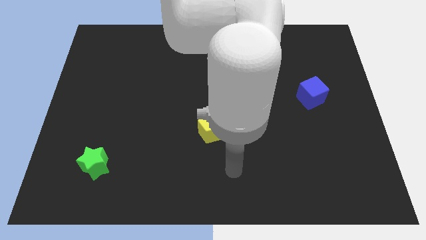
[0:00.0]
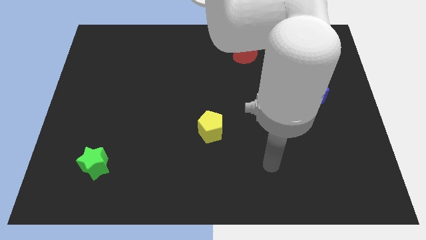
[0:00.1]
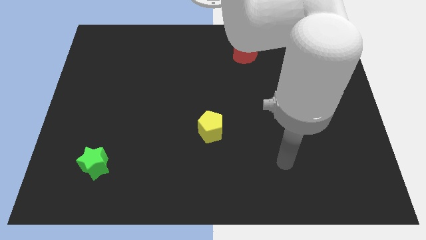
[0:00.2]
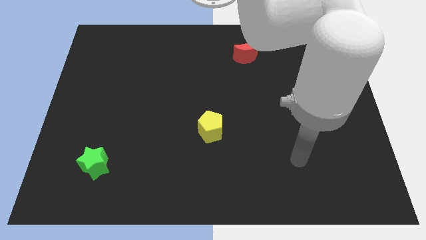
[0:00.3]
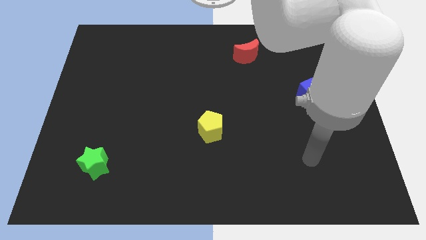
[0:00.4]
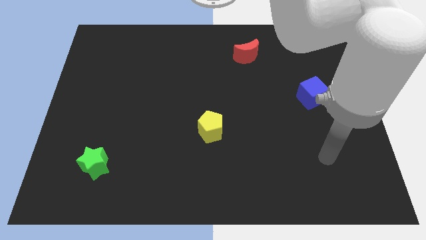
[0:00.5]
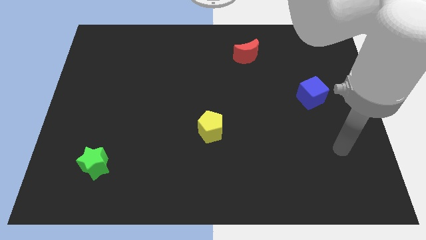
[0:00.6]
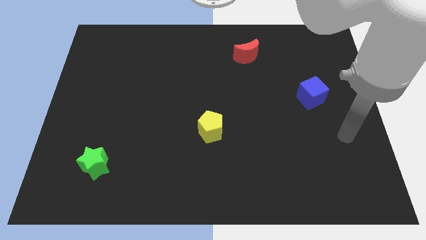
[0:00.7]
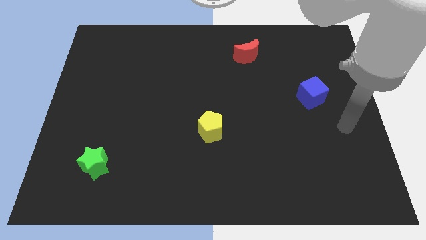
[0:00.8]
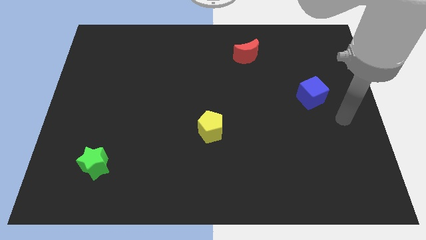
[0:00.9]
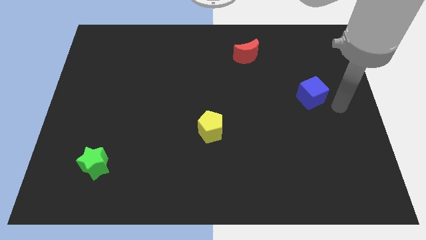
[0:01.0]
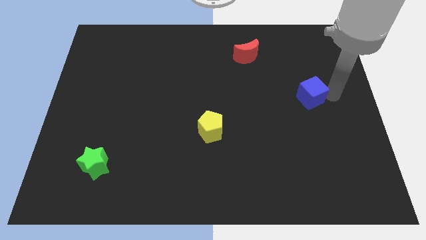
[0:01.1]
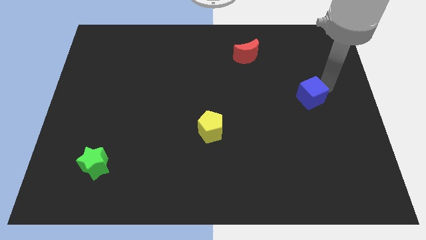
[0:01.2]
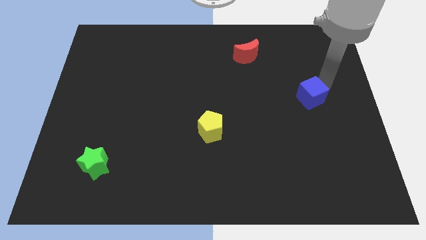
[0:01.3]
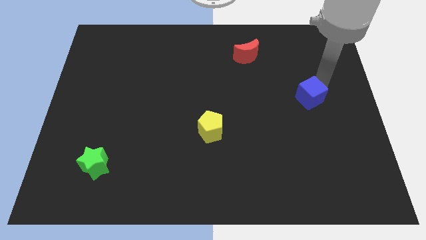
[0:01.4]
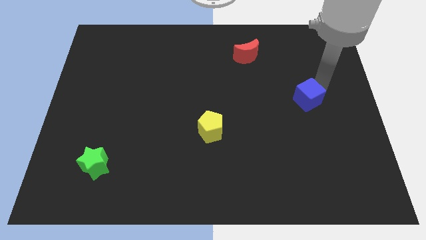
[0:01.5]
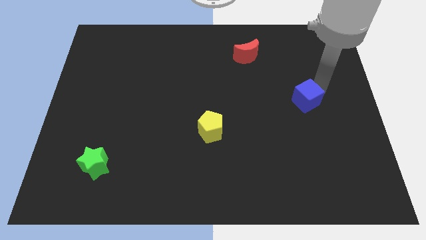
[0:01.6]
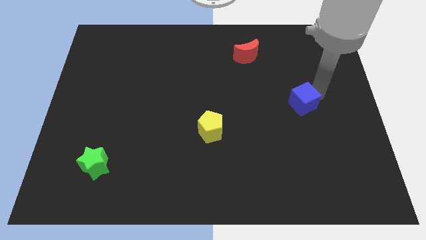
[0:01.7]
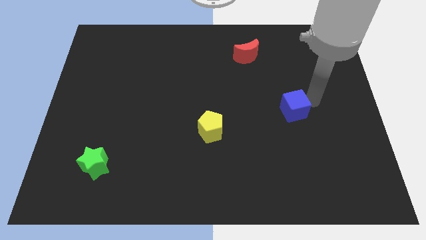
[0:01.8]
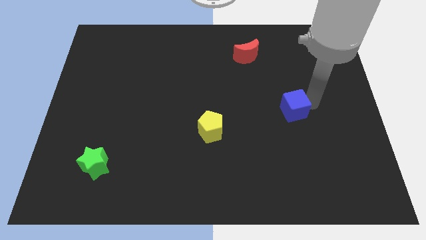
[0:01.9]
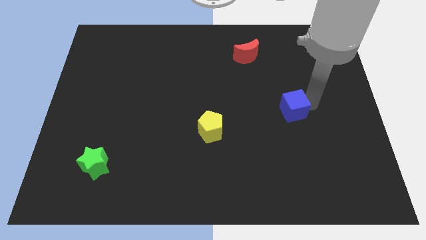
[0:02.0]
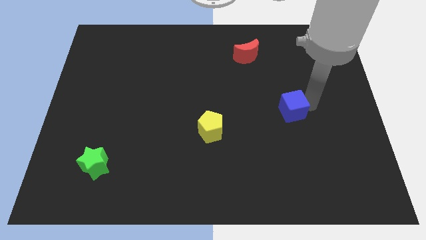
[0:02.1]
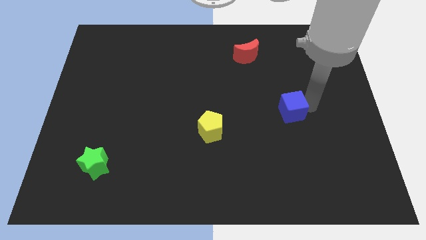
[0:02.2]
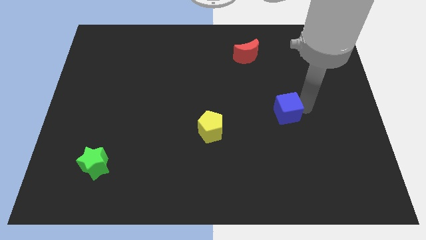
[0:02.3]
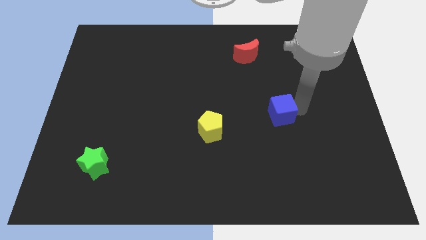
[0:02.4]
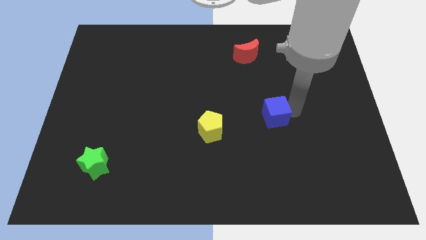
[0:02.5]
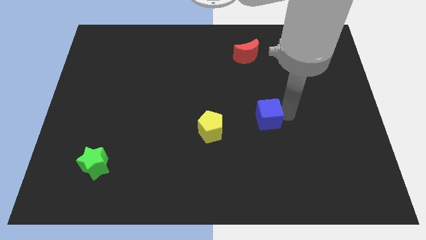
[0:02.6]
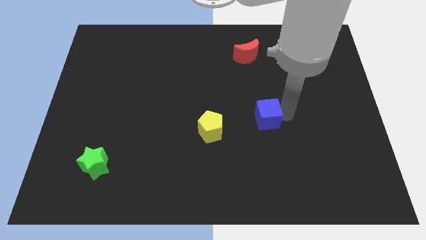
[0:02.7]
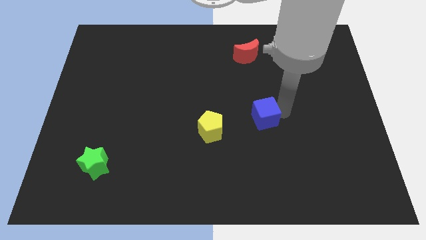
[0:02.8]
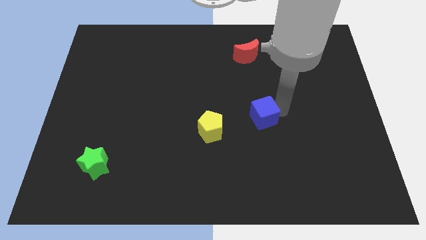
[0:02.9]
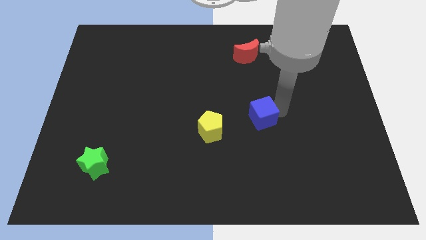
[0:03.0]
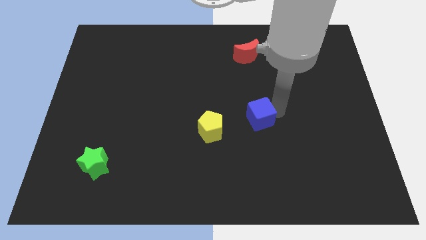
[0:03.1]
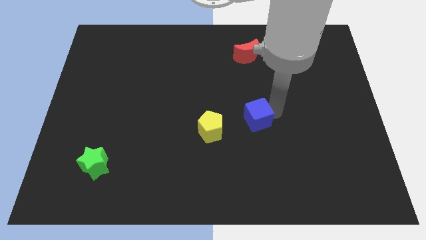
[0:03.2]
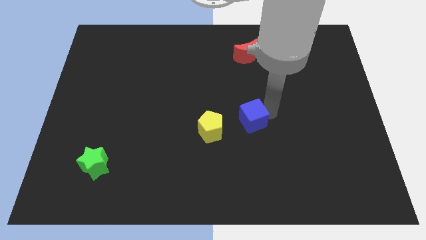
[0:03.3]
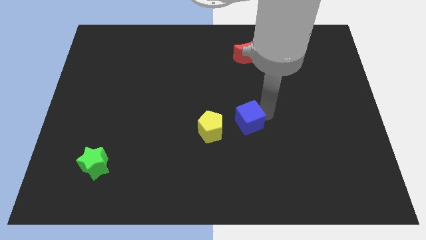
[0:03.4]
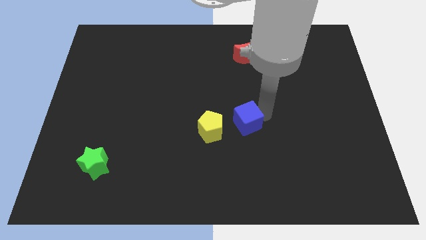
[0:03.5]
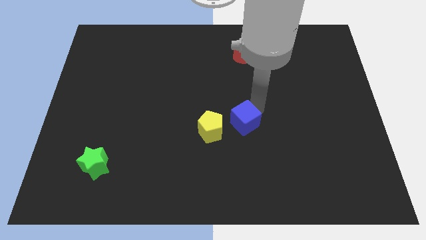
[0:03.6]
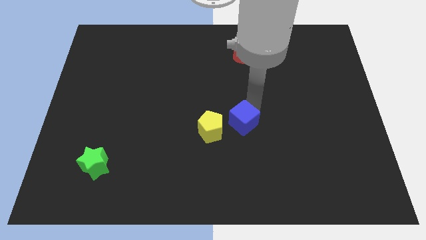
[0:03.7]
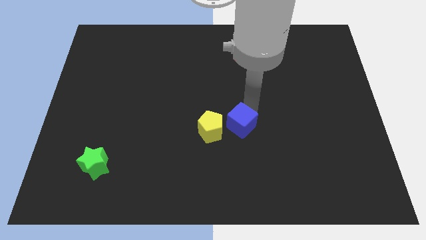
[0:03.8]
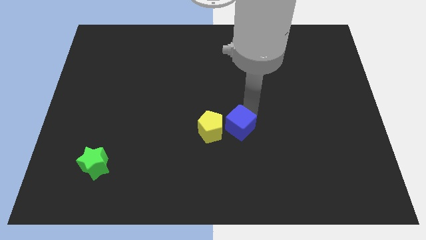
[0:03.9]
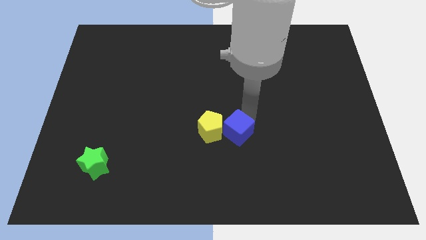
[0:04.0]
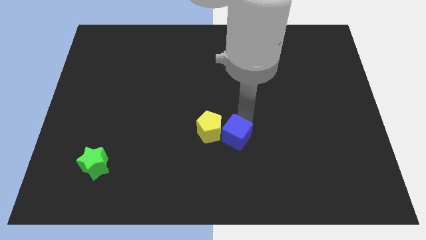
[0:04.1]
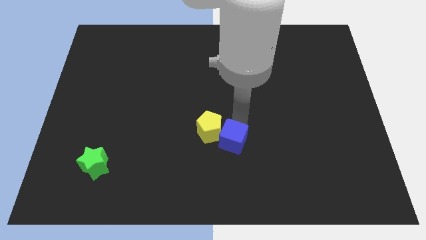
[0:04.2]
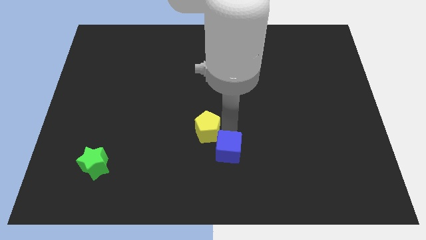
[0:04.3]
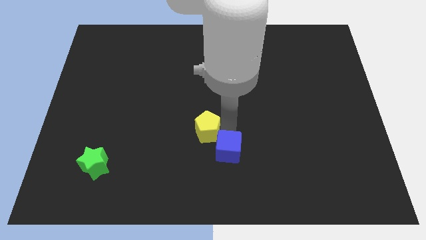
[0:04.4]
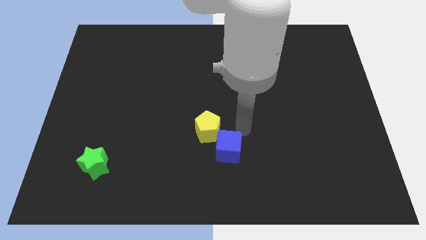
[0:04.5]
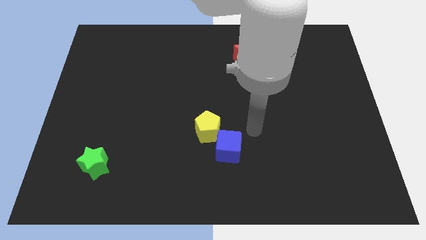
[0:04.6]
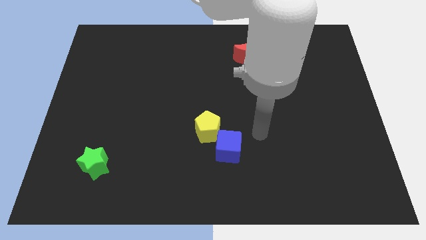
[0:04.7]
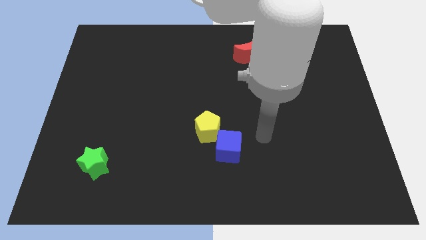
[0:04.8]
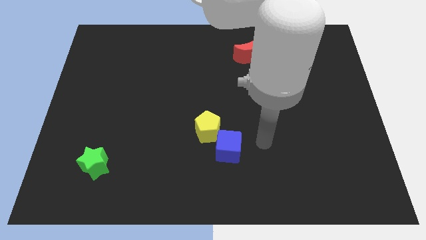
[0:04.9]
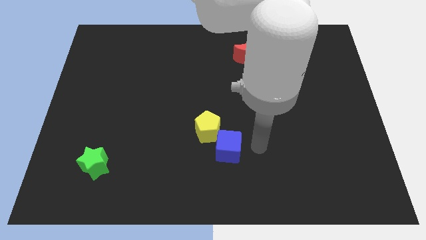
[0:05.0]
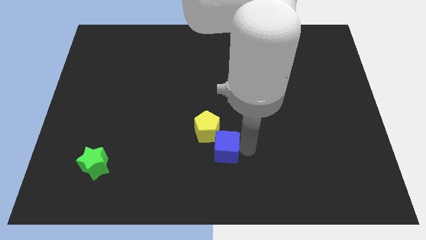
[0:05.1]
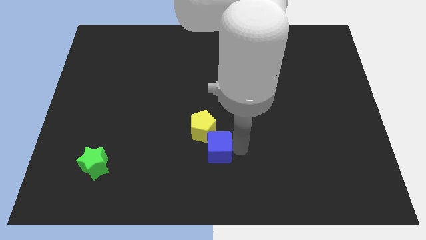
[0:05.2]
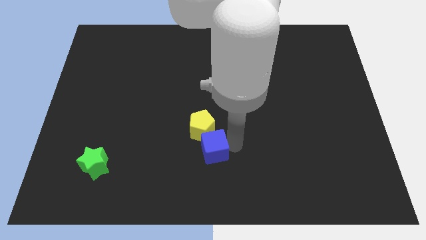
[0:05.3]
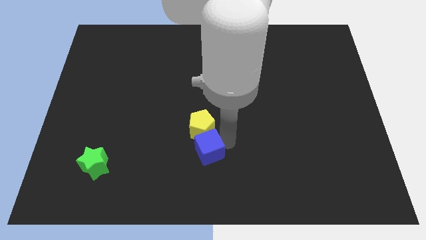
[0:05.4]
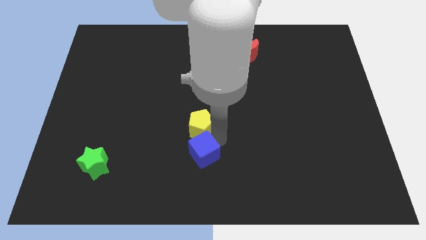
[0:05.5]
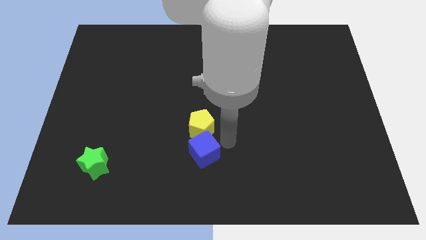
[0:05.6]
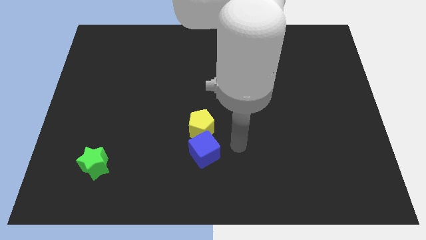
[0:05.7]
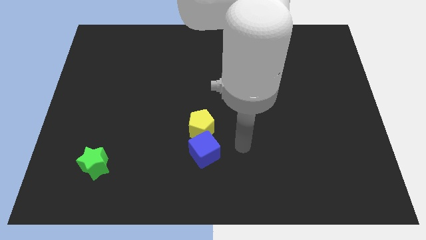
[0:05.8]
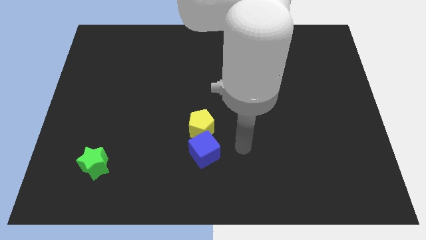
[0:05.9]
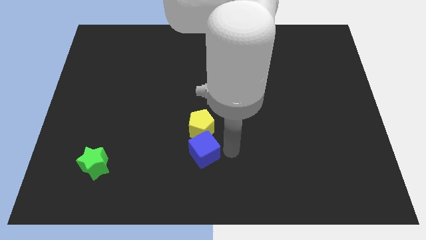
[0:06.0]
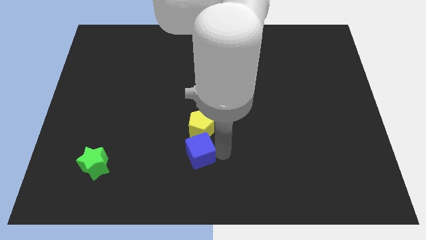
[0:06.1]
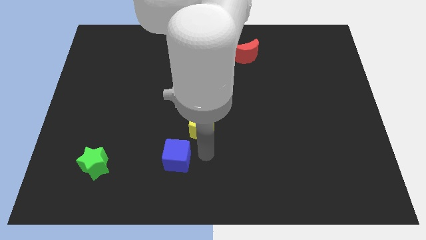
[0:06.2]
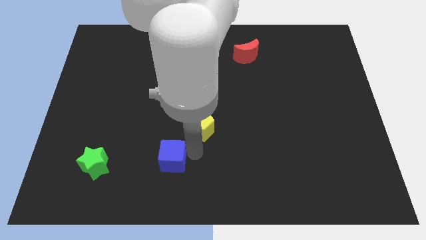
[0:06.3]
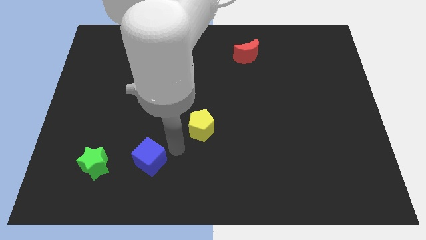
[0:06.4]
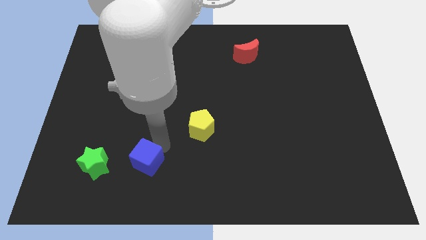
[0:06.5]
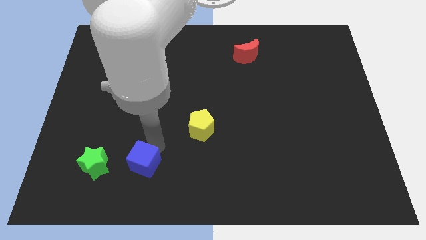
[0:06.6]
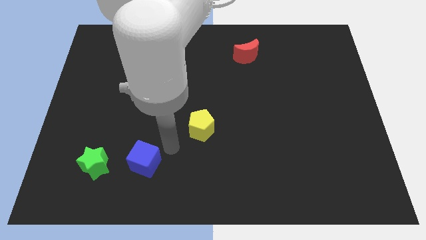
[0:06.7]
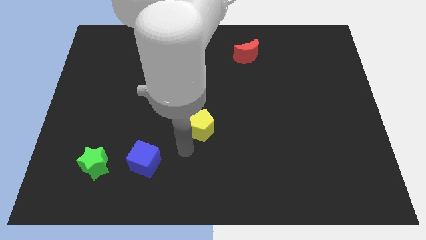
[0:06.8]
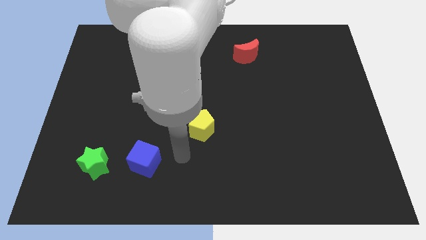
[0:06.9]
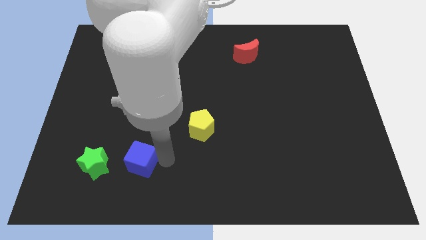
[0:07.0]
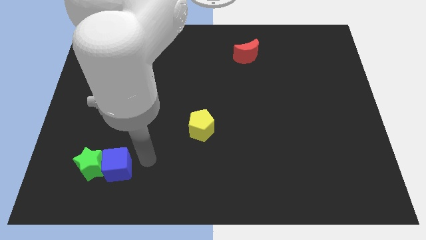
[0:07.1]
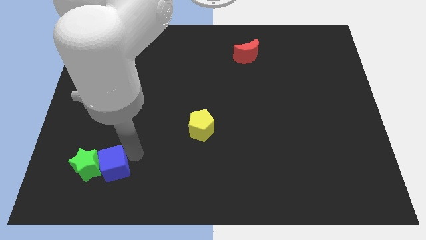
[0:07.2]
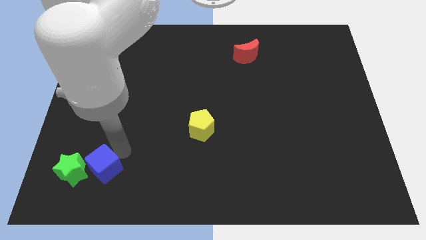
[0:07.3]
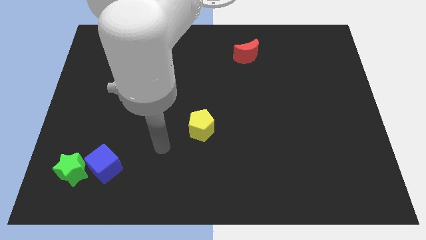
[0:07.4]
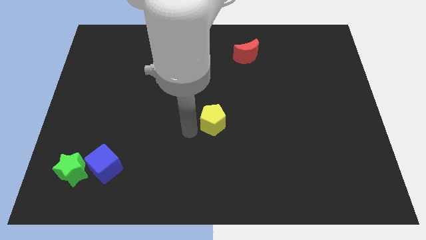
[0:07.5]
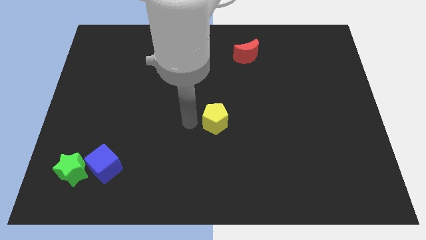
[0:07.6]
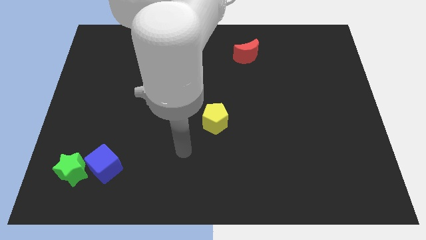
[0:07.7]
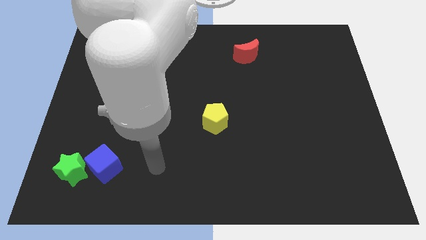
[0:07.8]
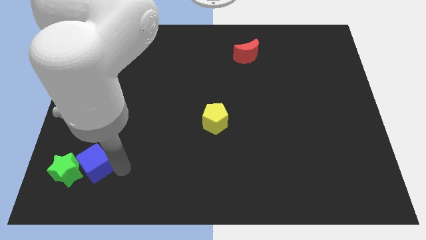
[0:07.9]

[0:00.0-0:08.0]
slide the blue block towards the green star

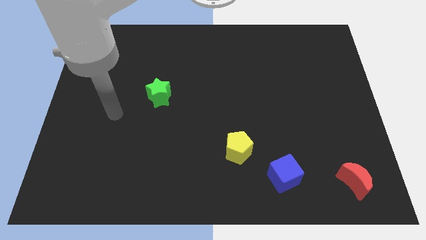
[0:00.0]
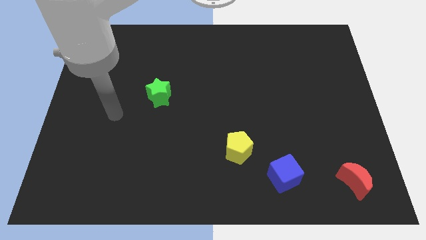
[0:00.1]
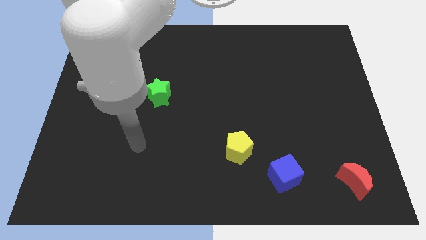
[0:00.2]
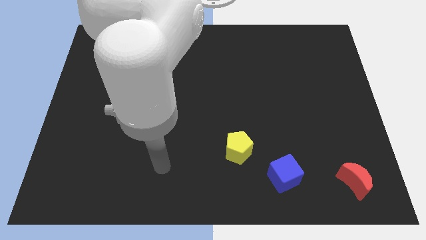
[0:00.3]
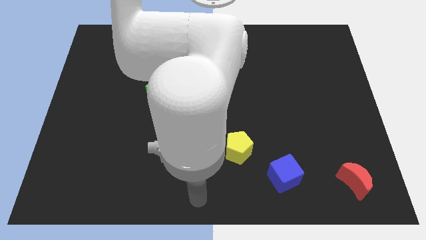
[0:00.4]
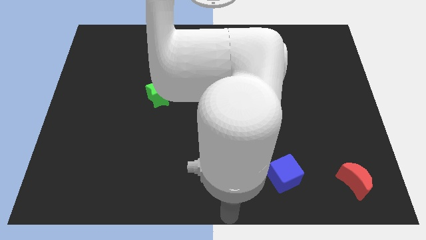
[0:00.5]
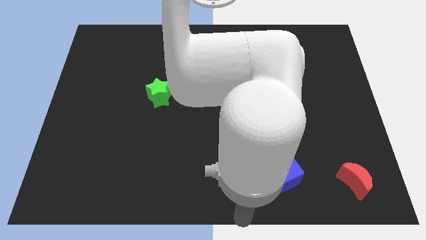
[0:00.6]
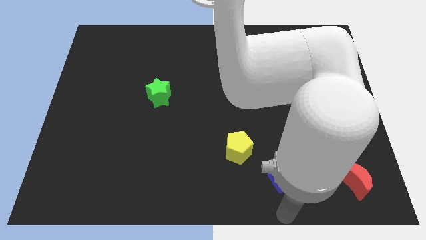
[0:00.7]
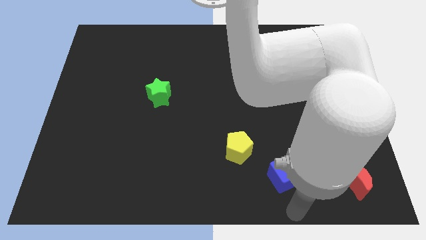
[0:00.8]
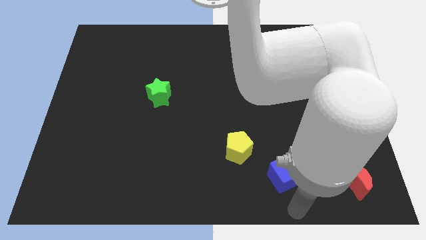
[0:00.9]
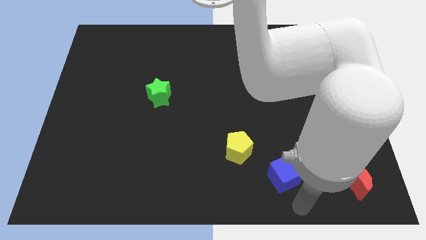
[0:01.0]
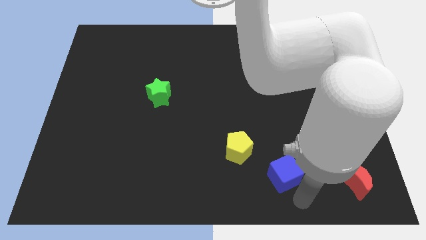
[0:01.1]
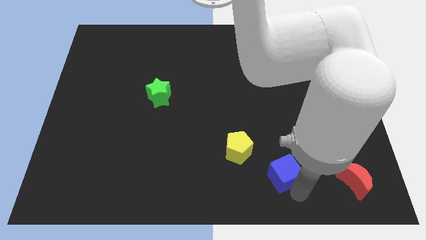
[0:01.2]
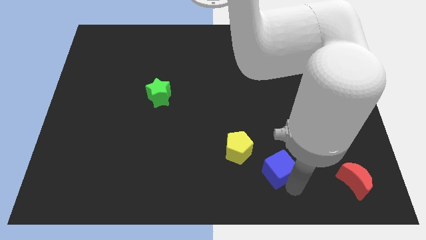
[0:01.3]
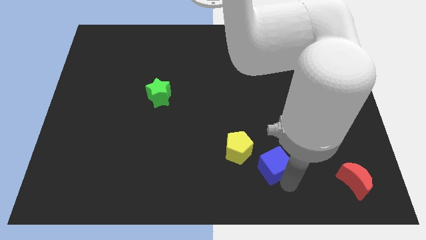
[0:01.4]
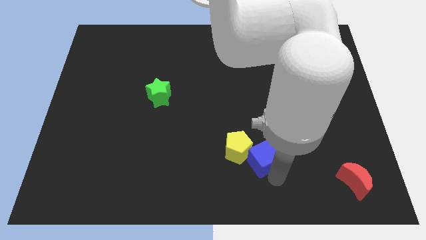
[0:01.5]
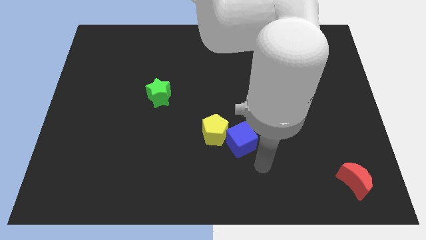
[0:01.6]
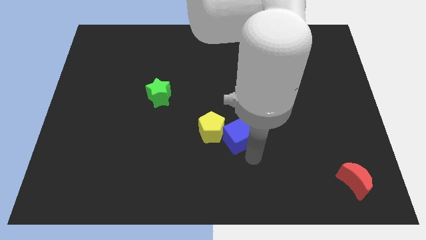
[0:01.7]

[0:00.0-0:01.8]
move the cube to the yellow block
